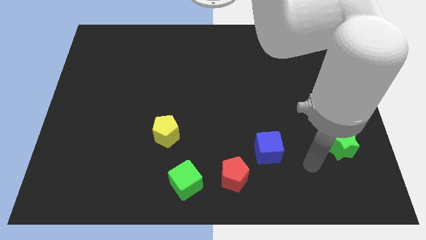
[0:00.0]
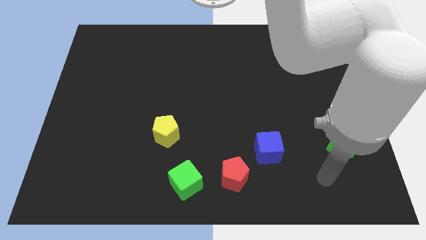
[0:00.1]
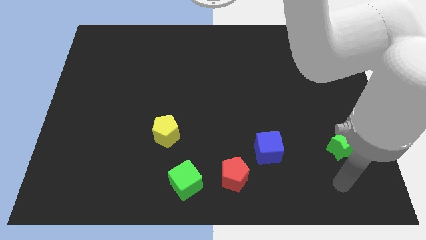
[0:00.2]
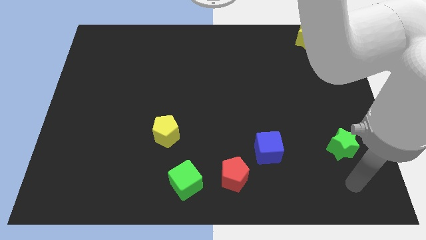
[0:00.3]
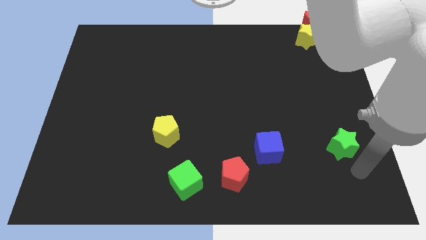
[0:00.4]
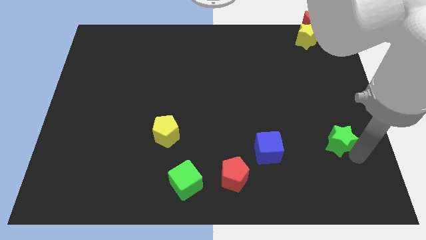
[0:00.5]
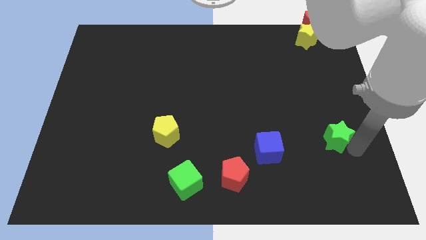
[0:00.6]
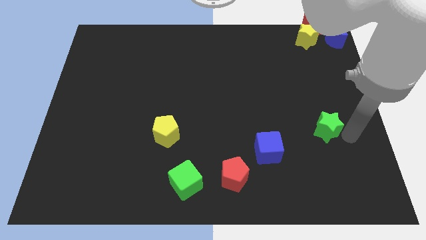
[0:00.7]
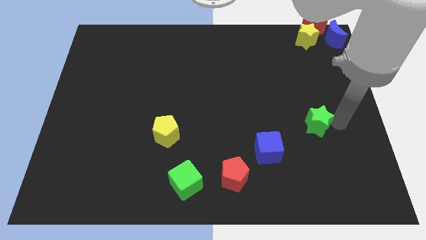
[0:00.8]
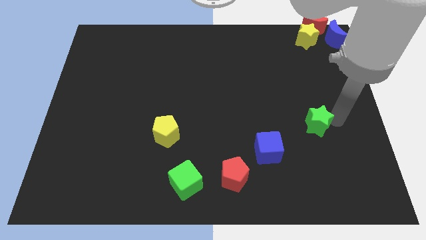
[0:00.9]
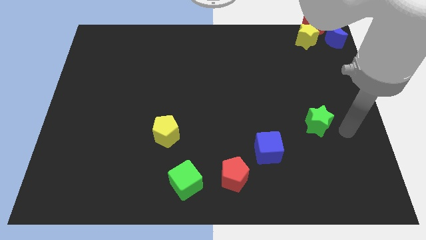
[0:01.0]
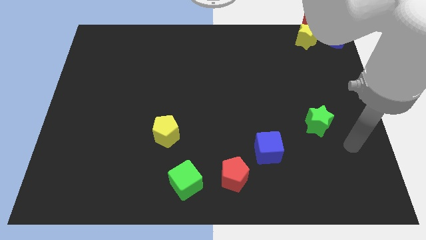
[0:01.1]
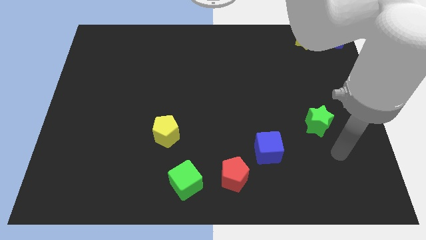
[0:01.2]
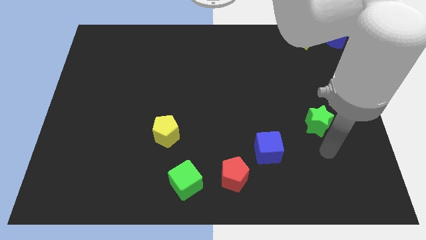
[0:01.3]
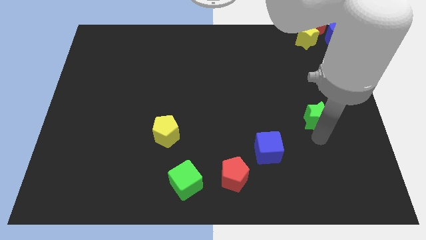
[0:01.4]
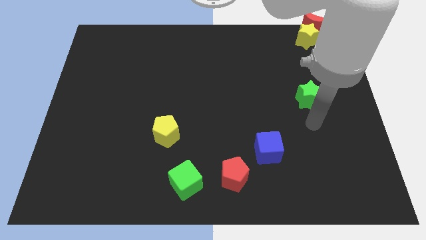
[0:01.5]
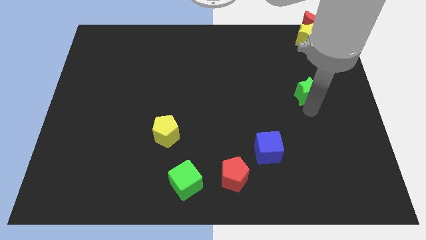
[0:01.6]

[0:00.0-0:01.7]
push the green star to the top right of the blue cube

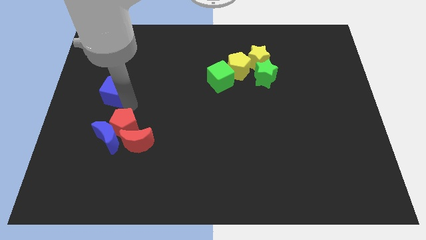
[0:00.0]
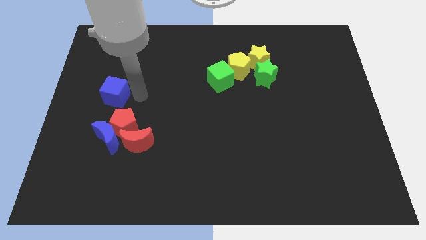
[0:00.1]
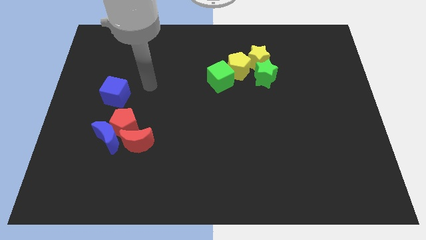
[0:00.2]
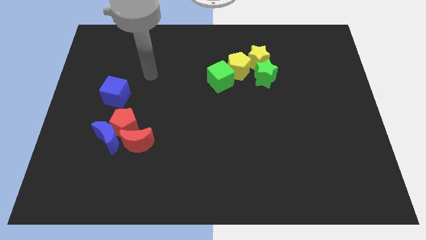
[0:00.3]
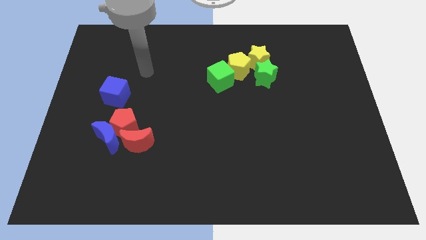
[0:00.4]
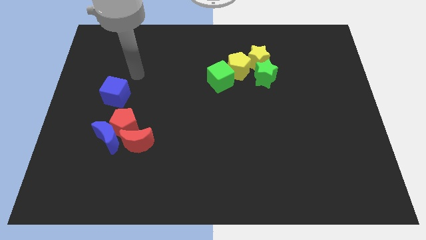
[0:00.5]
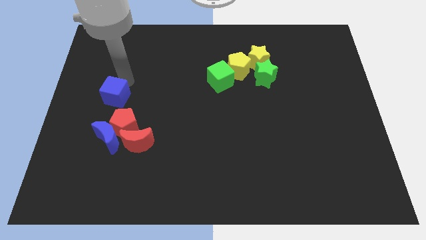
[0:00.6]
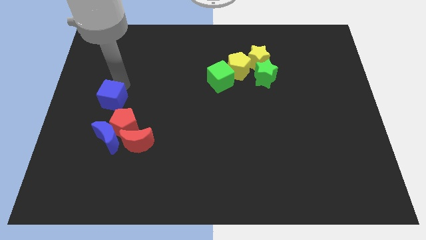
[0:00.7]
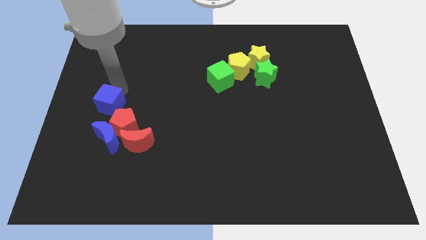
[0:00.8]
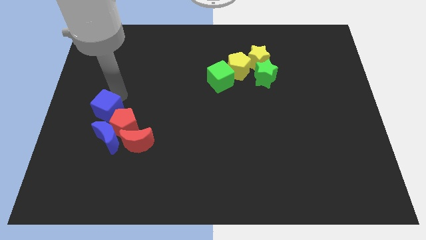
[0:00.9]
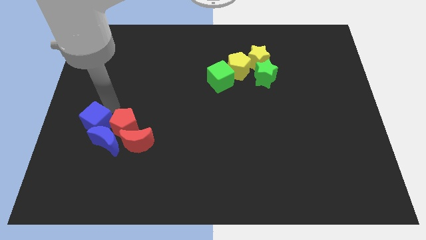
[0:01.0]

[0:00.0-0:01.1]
push the blue cube into he top side of the blue crescent

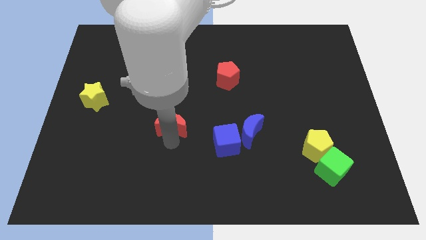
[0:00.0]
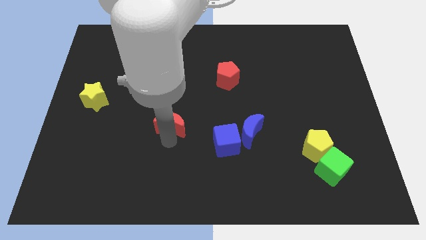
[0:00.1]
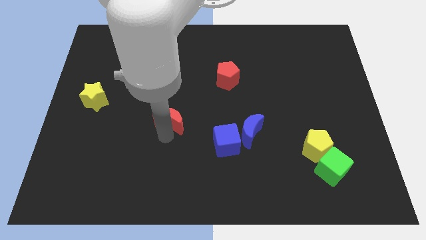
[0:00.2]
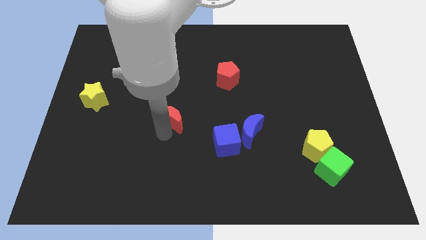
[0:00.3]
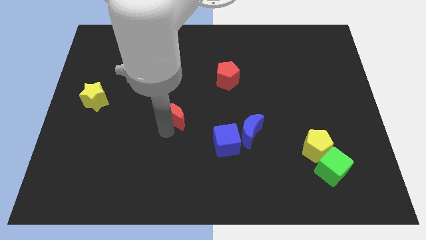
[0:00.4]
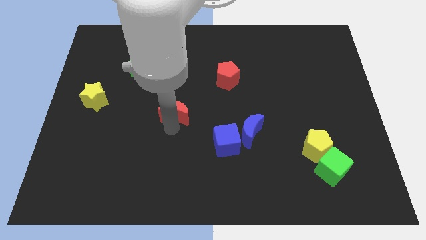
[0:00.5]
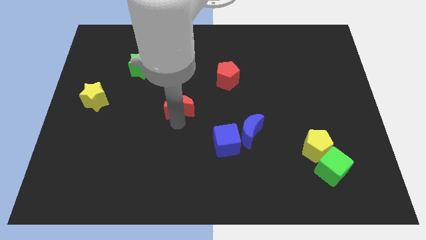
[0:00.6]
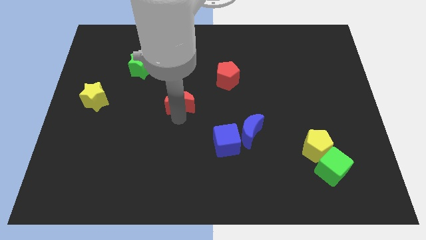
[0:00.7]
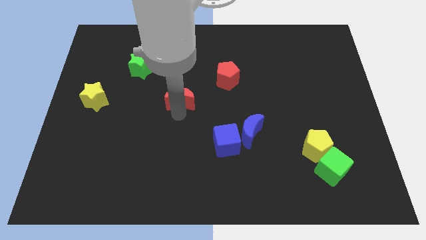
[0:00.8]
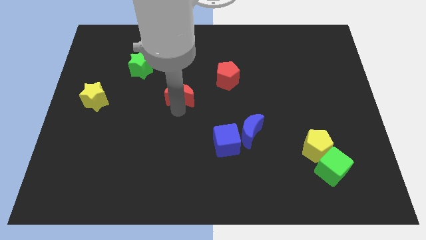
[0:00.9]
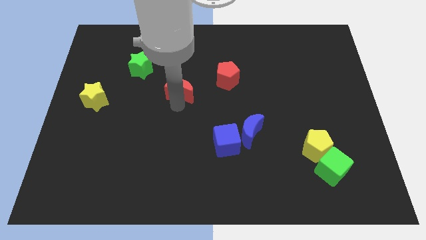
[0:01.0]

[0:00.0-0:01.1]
push the red crescent to the center of the board

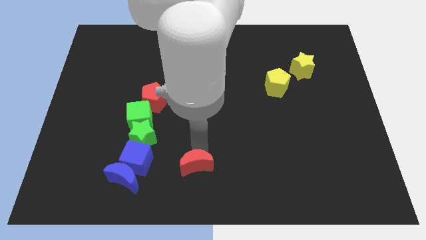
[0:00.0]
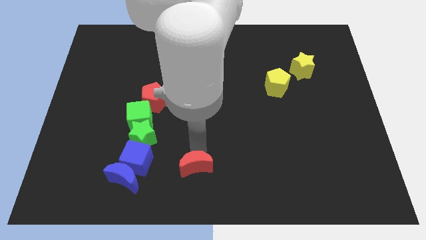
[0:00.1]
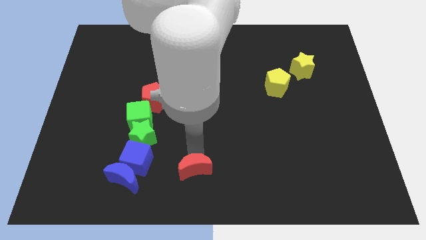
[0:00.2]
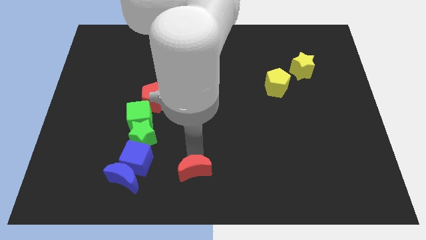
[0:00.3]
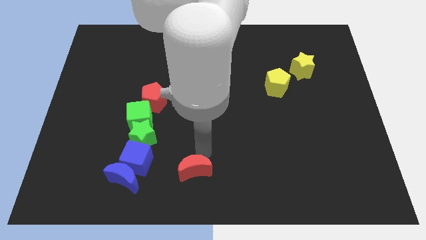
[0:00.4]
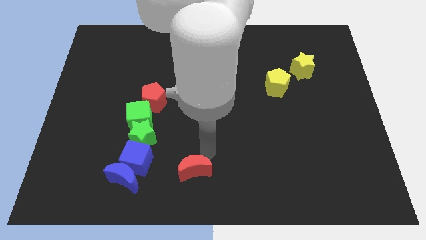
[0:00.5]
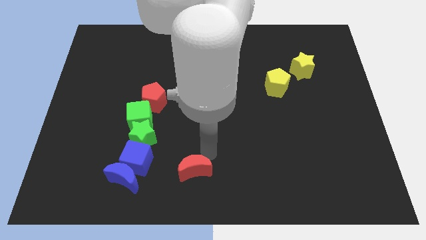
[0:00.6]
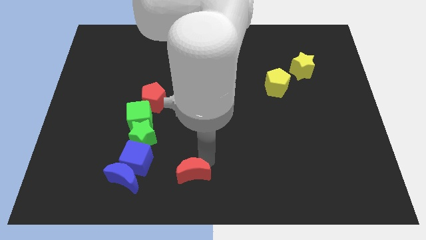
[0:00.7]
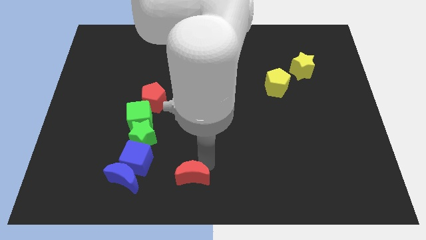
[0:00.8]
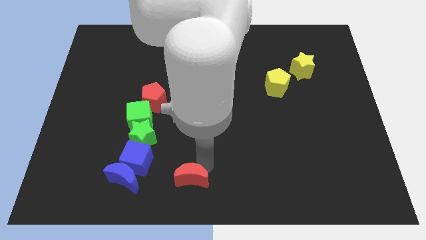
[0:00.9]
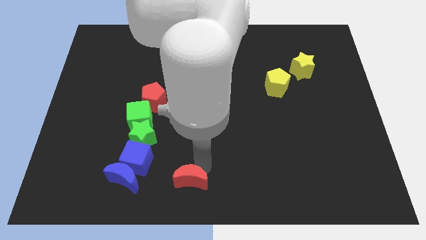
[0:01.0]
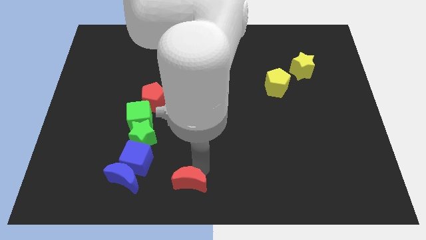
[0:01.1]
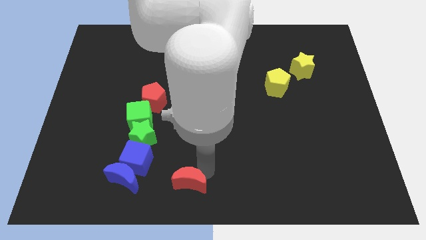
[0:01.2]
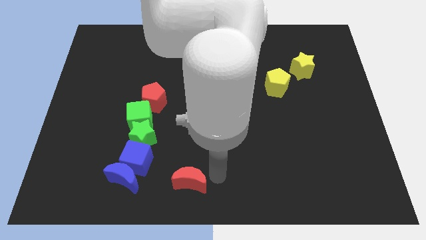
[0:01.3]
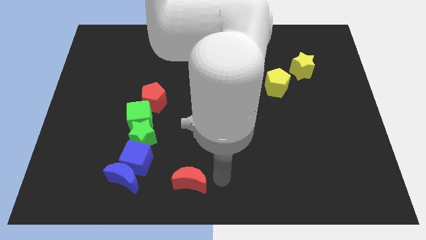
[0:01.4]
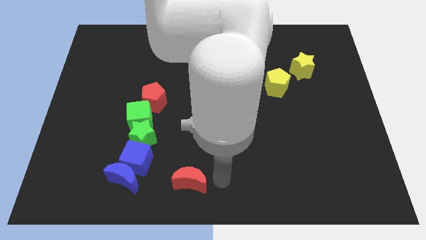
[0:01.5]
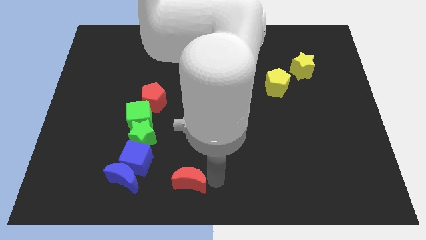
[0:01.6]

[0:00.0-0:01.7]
slide the red moon slightly to the bottom

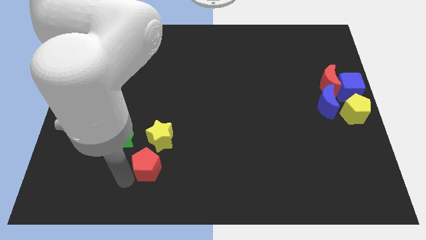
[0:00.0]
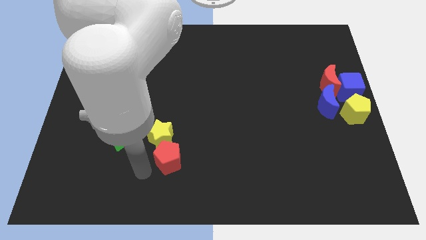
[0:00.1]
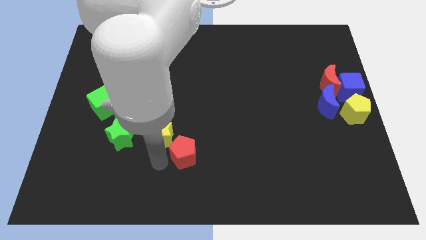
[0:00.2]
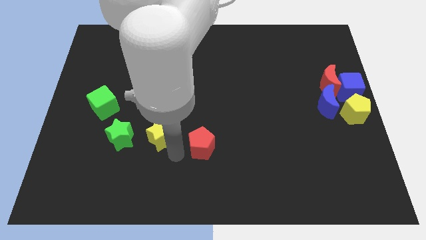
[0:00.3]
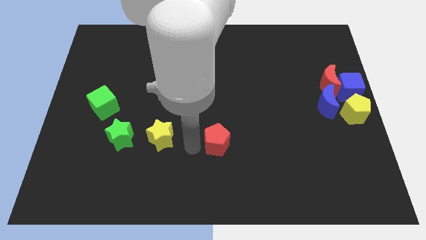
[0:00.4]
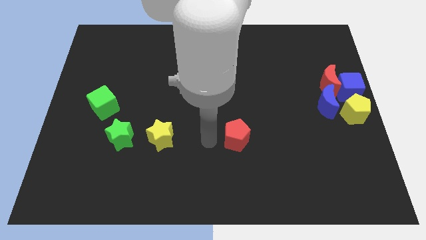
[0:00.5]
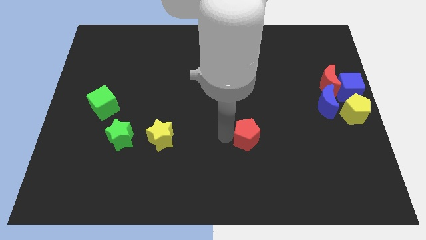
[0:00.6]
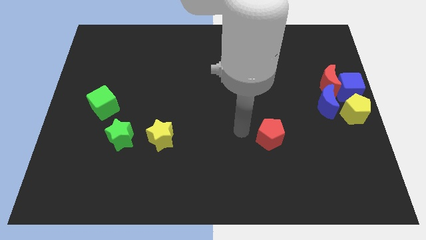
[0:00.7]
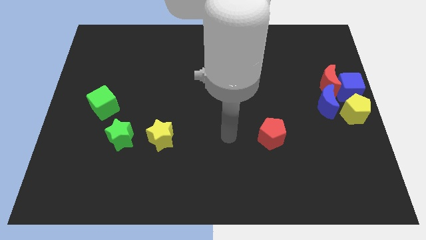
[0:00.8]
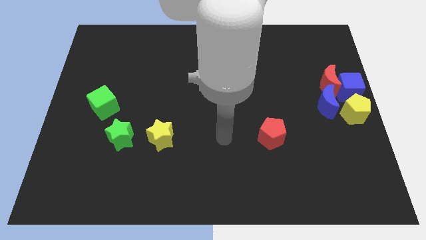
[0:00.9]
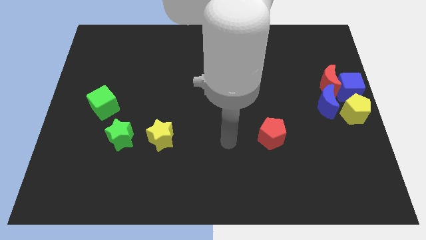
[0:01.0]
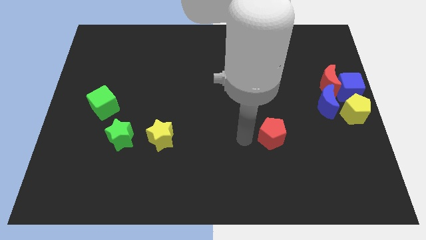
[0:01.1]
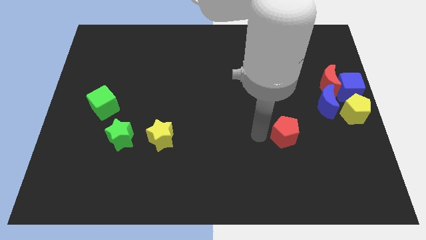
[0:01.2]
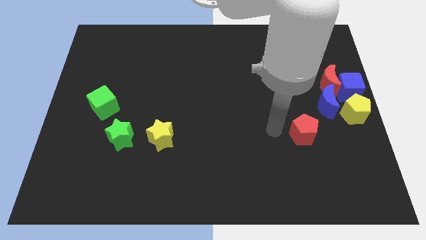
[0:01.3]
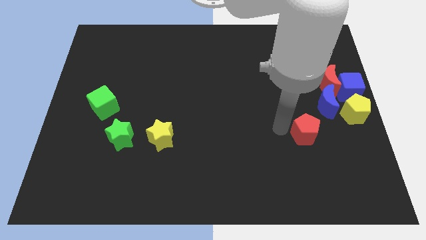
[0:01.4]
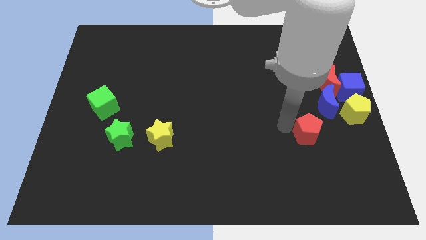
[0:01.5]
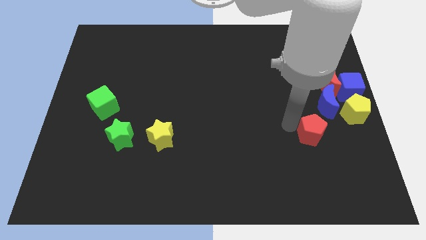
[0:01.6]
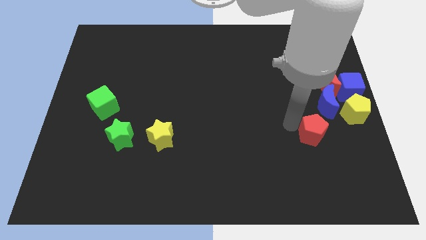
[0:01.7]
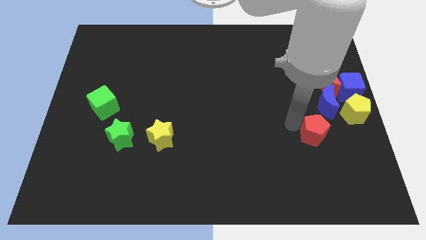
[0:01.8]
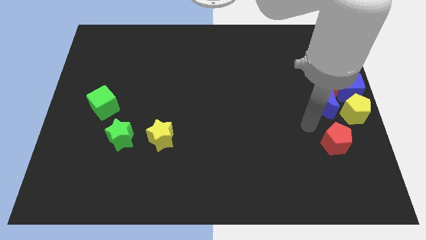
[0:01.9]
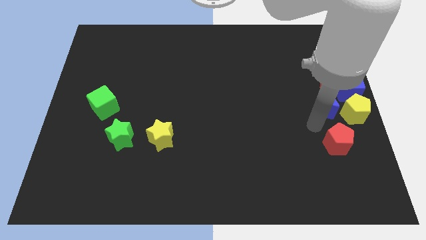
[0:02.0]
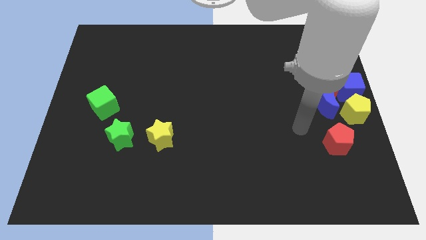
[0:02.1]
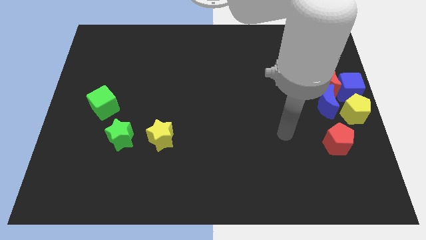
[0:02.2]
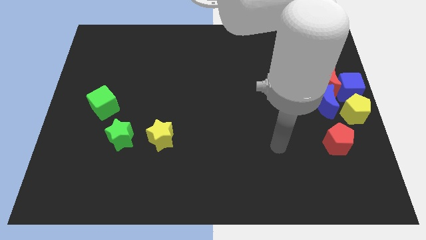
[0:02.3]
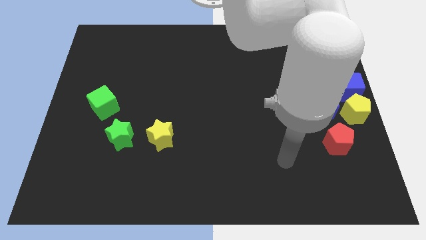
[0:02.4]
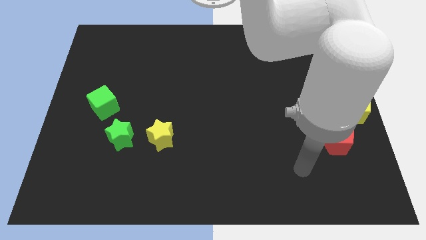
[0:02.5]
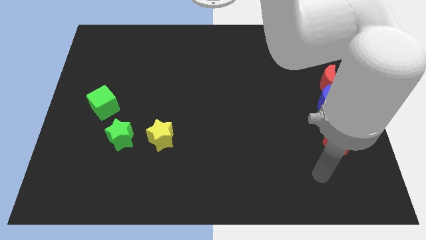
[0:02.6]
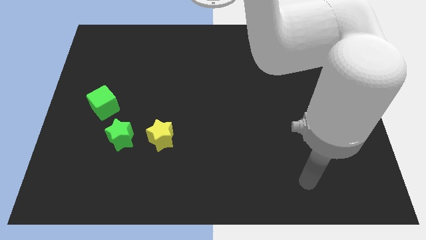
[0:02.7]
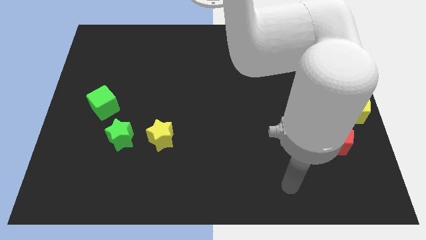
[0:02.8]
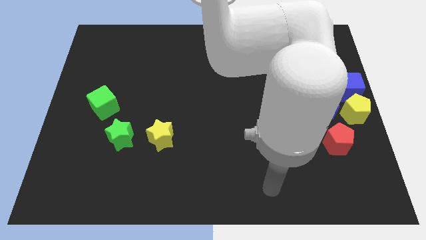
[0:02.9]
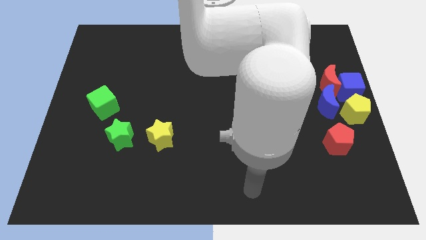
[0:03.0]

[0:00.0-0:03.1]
place red pentagon to bottom left of yellow pentagon

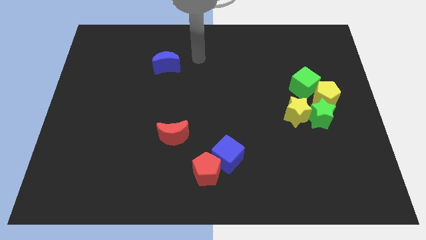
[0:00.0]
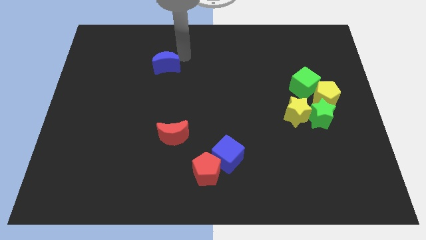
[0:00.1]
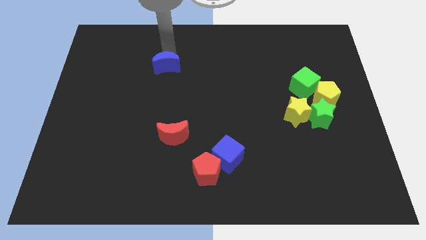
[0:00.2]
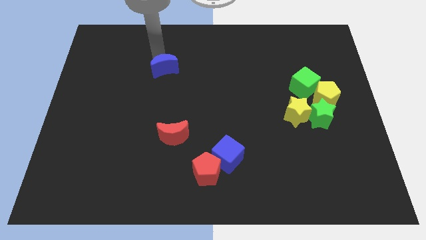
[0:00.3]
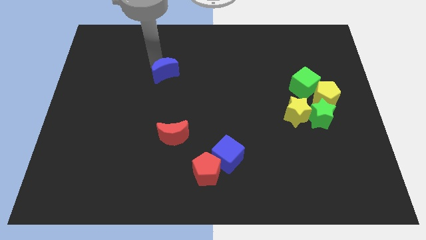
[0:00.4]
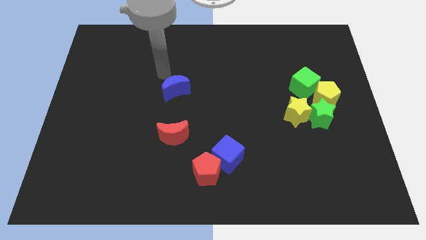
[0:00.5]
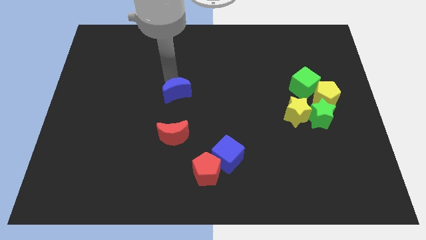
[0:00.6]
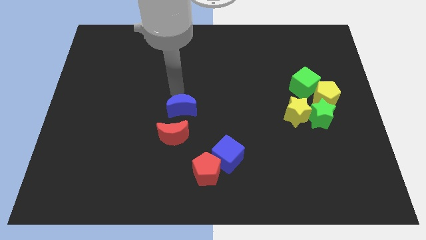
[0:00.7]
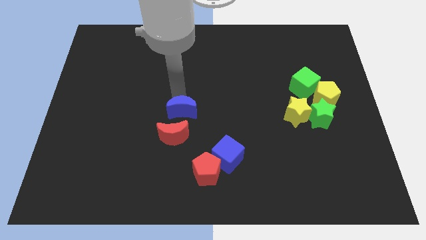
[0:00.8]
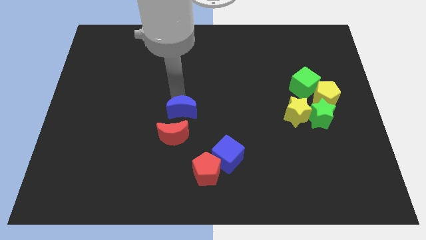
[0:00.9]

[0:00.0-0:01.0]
push the blue moon to the center of the board
